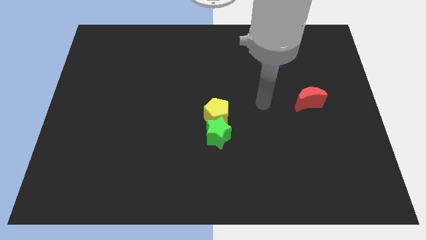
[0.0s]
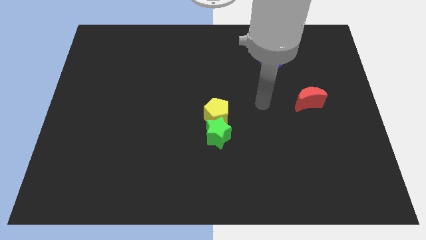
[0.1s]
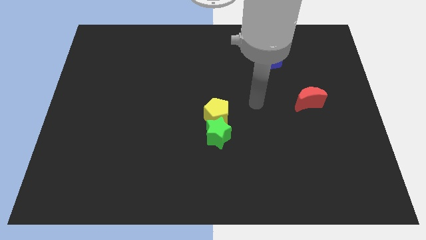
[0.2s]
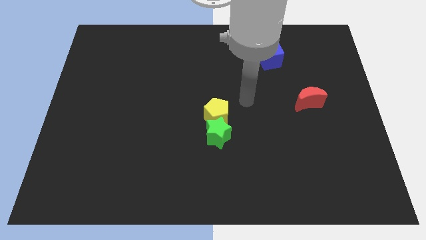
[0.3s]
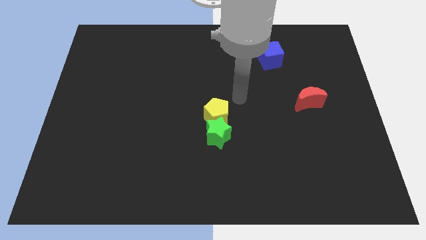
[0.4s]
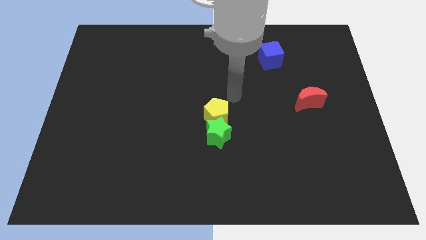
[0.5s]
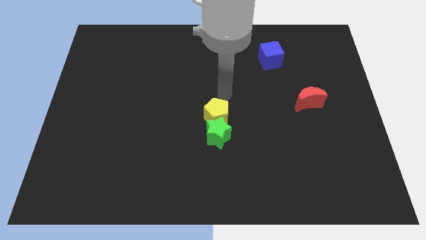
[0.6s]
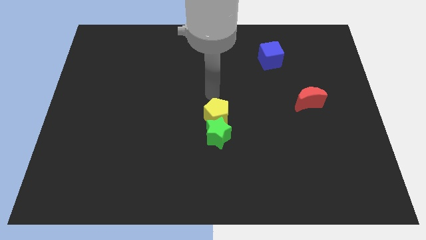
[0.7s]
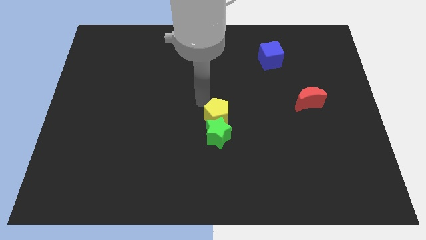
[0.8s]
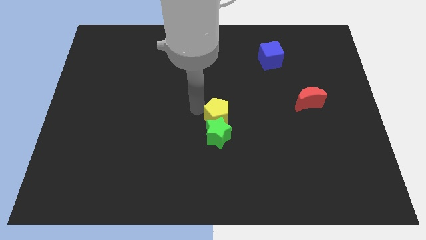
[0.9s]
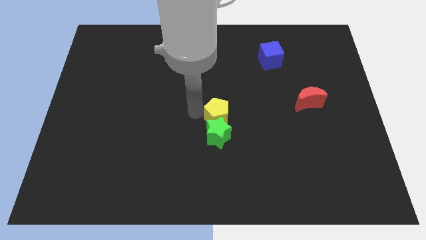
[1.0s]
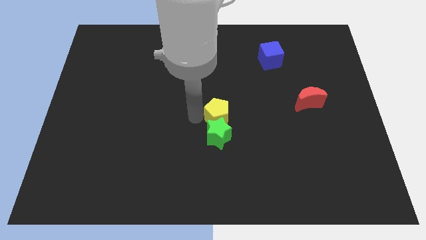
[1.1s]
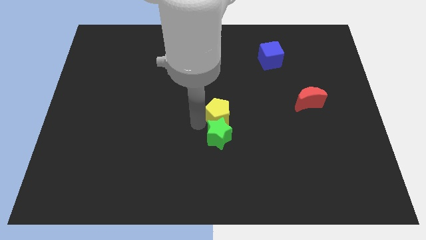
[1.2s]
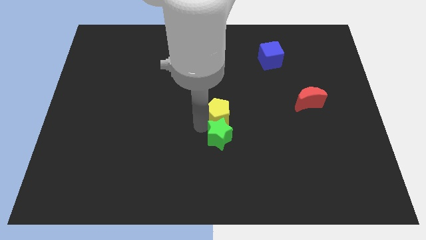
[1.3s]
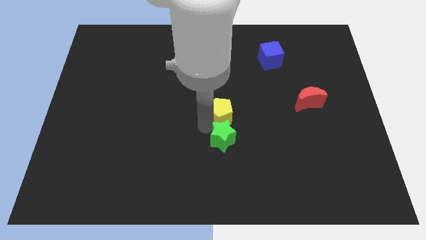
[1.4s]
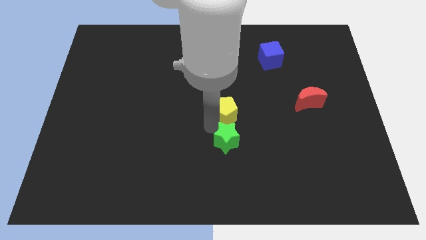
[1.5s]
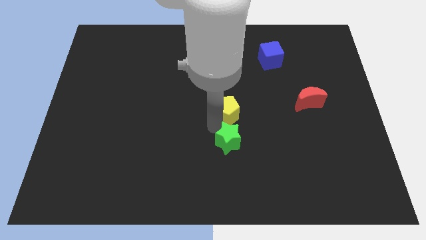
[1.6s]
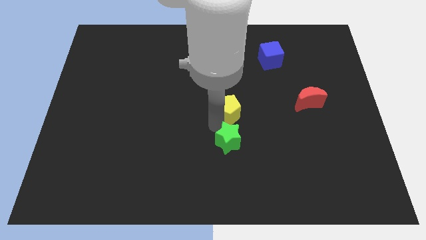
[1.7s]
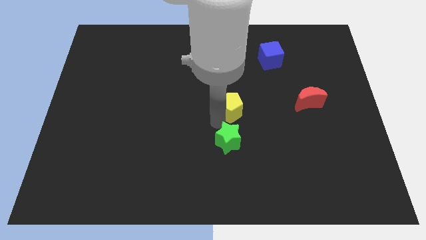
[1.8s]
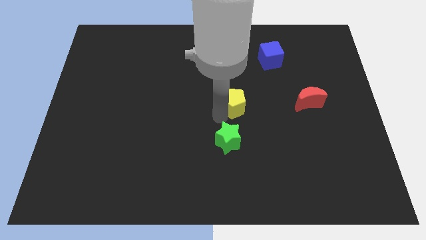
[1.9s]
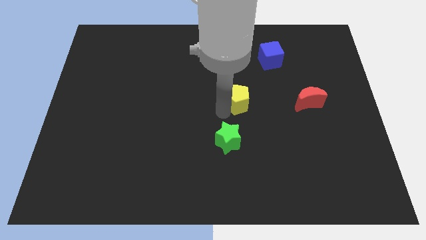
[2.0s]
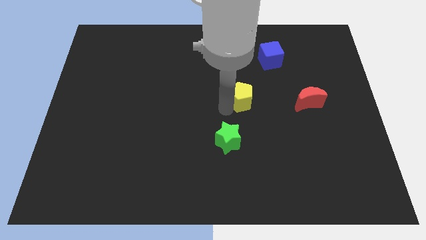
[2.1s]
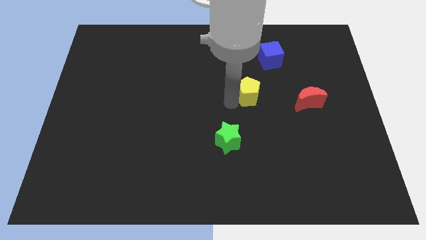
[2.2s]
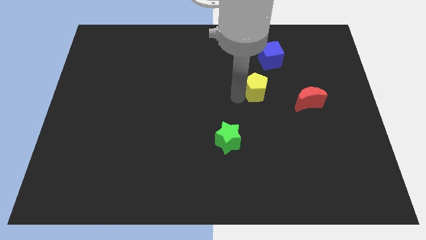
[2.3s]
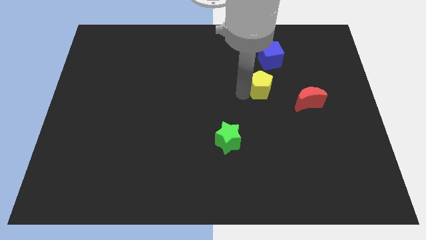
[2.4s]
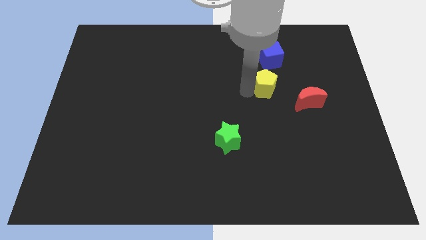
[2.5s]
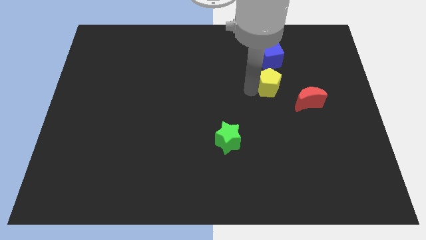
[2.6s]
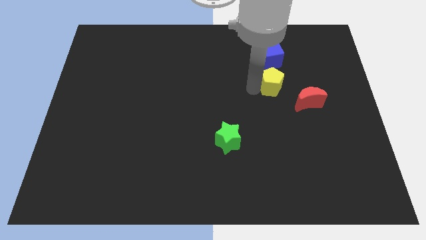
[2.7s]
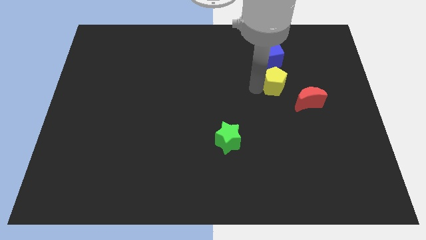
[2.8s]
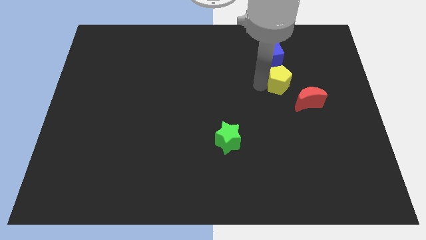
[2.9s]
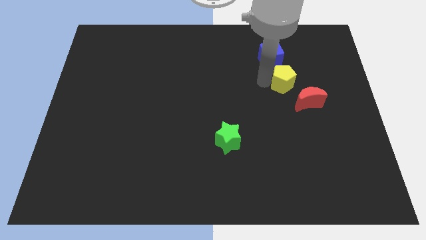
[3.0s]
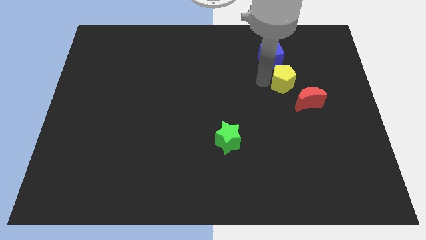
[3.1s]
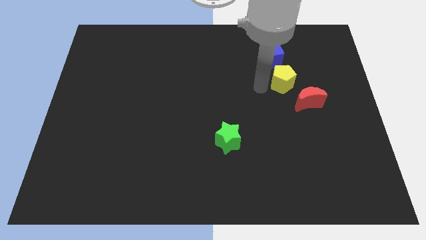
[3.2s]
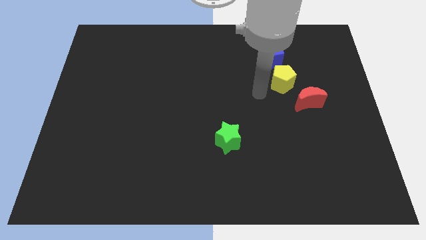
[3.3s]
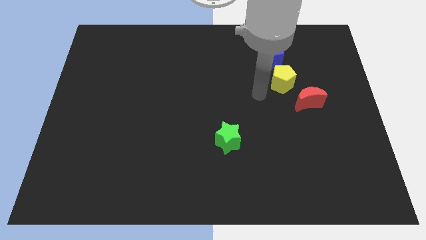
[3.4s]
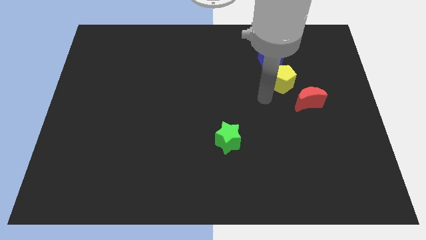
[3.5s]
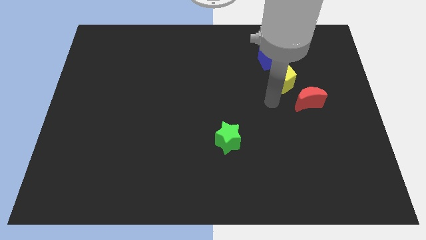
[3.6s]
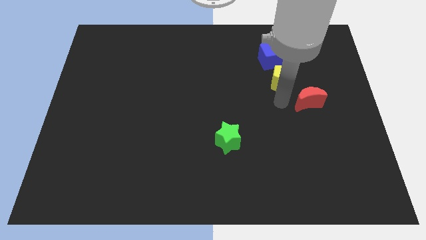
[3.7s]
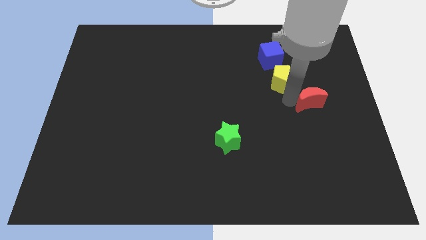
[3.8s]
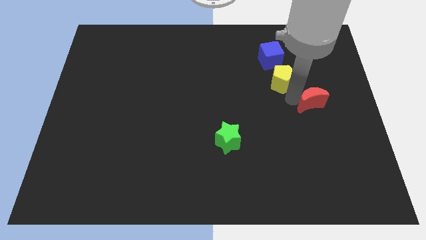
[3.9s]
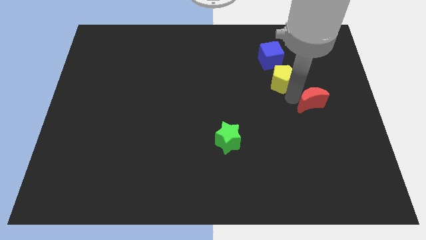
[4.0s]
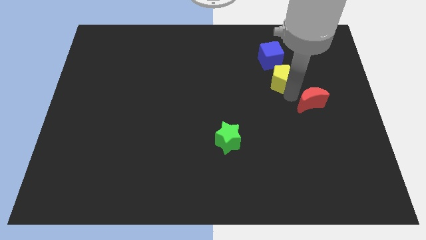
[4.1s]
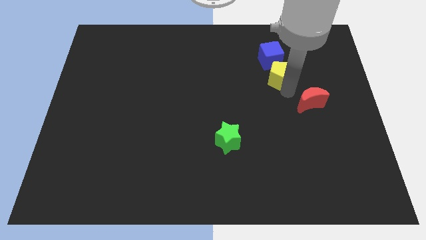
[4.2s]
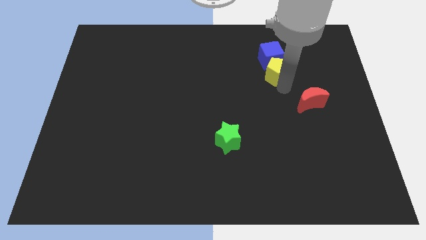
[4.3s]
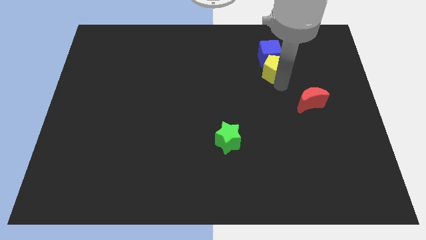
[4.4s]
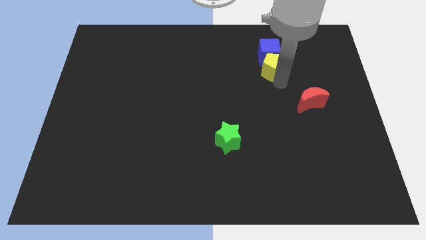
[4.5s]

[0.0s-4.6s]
move the yellow pentagon towards the blue cube

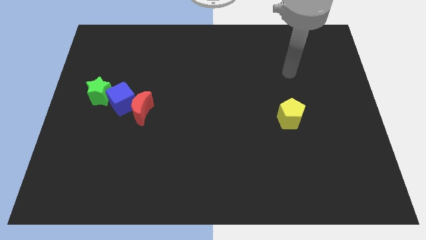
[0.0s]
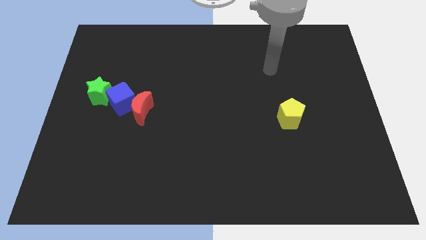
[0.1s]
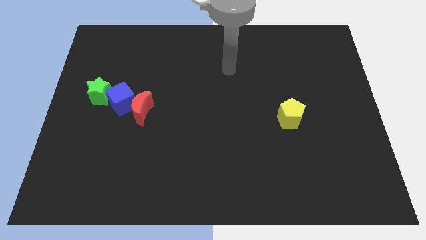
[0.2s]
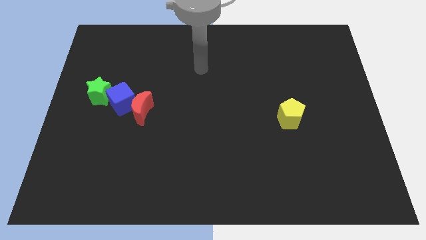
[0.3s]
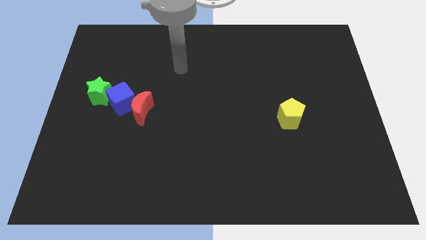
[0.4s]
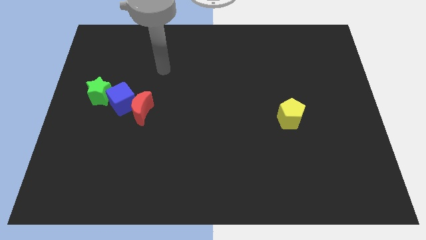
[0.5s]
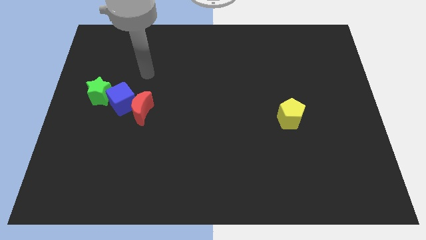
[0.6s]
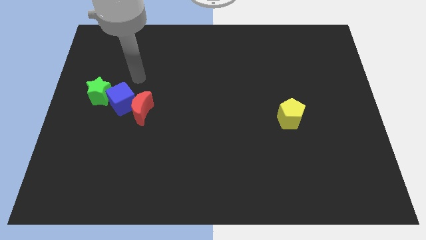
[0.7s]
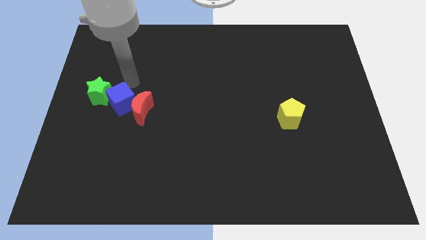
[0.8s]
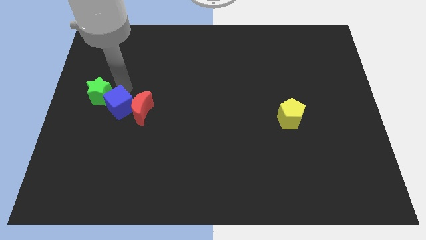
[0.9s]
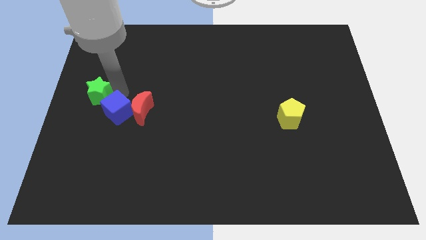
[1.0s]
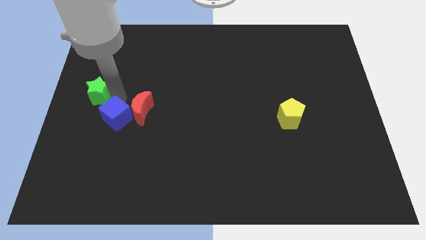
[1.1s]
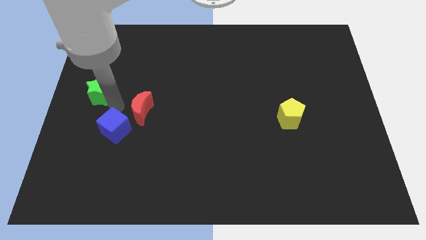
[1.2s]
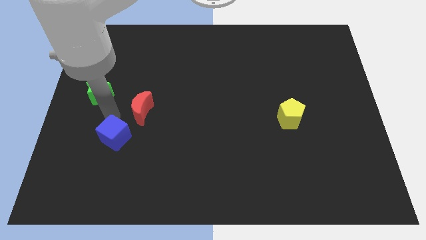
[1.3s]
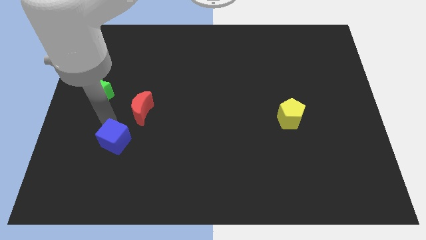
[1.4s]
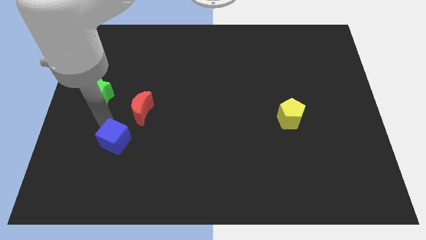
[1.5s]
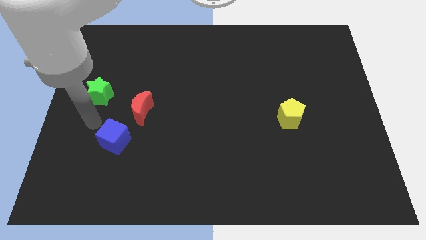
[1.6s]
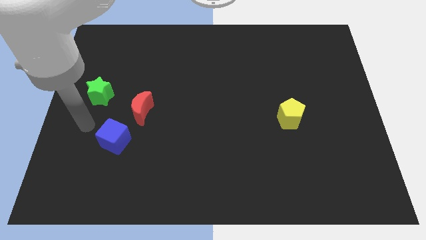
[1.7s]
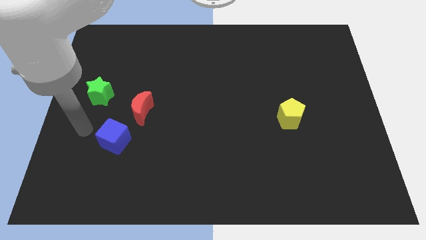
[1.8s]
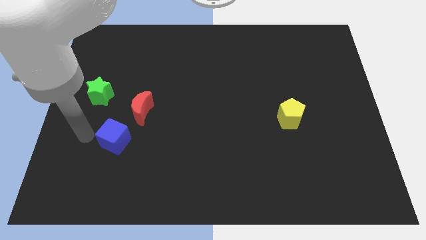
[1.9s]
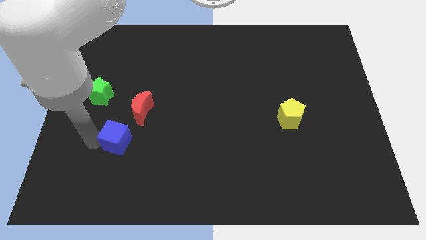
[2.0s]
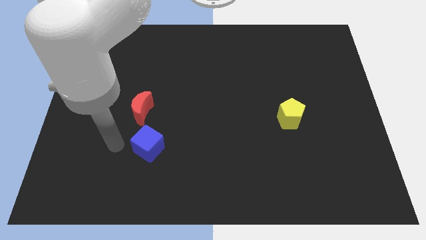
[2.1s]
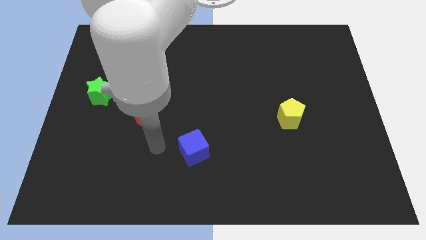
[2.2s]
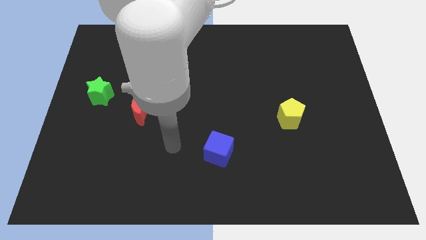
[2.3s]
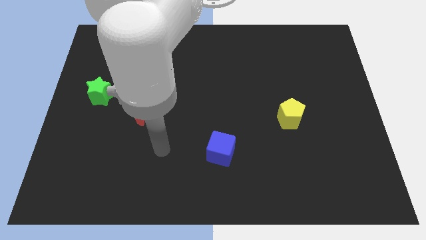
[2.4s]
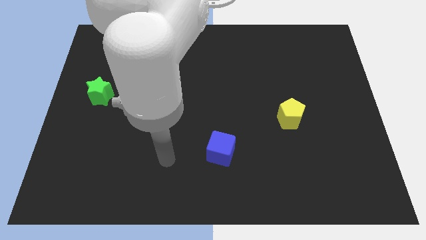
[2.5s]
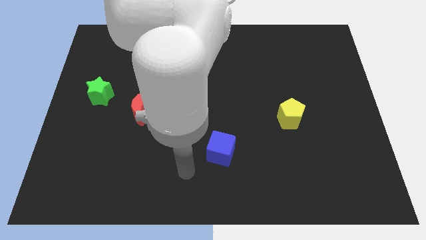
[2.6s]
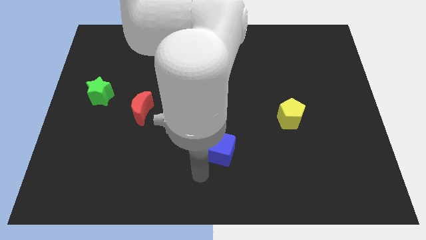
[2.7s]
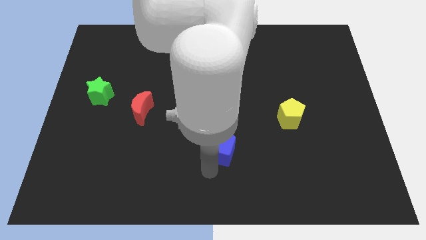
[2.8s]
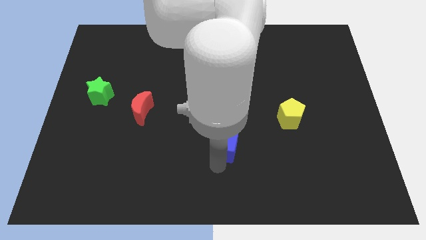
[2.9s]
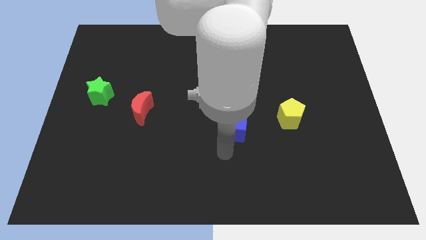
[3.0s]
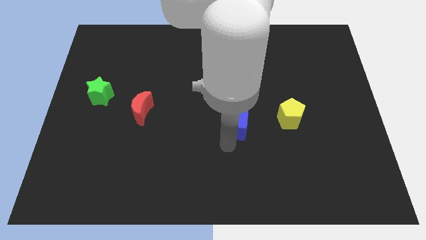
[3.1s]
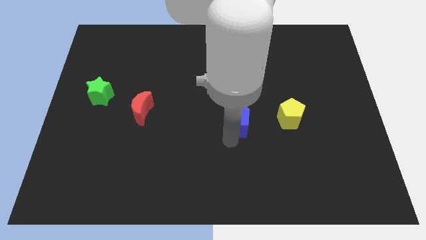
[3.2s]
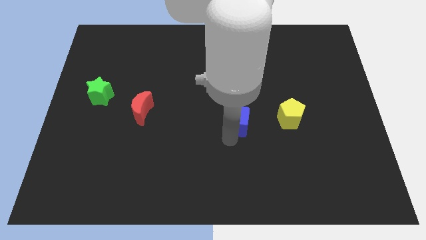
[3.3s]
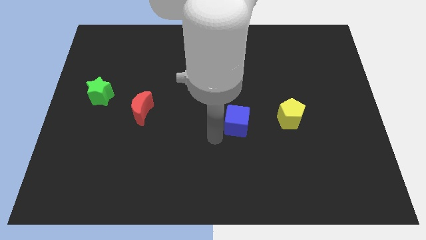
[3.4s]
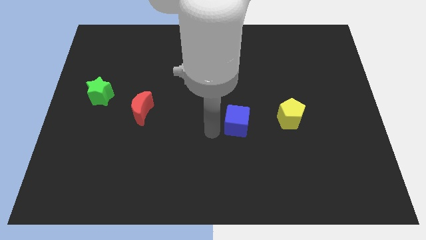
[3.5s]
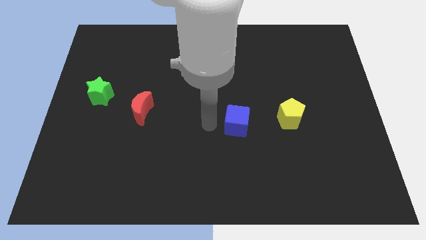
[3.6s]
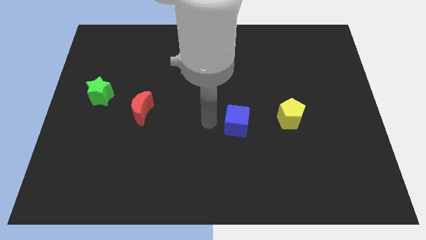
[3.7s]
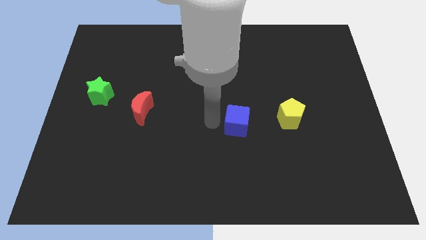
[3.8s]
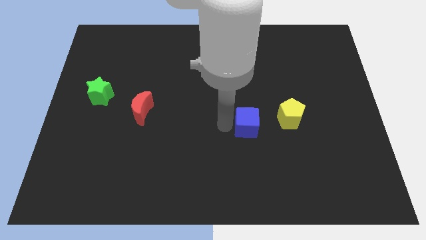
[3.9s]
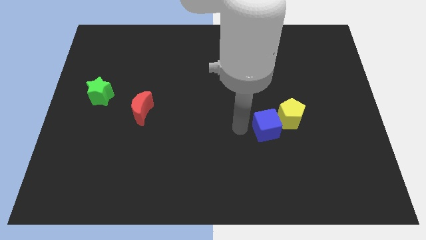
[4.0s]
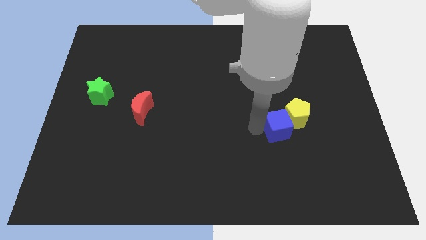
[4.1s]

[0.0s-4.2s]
put the blue cube towards the yellow block
